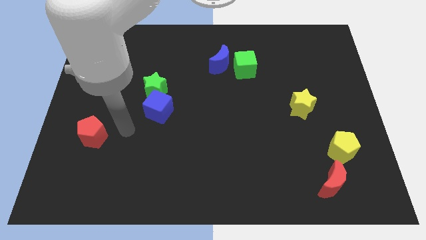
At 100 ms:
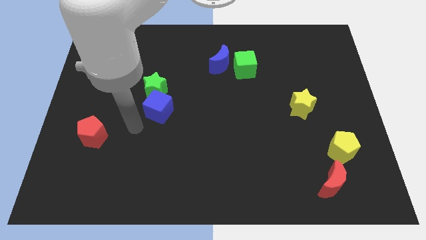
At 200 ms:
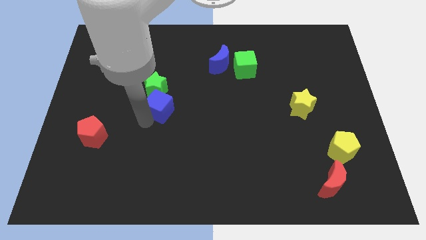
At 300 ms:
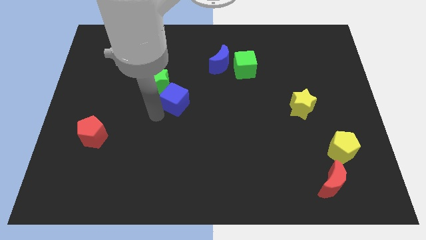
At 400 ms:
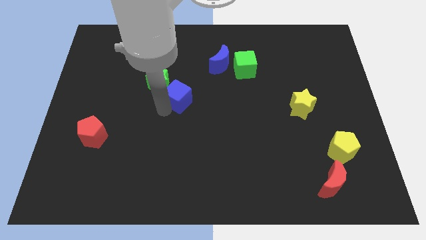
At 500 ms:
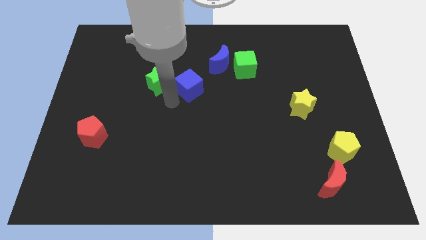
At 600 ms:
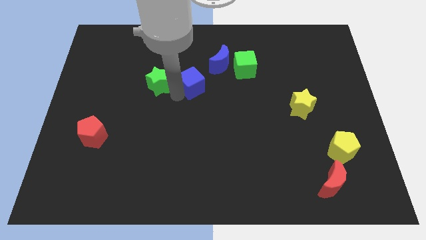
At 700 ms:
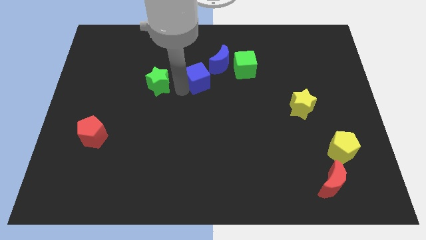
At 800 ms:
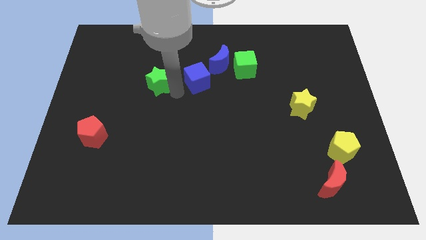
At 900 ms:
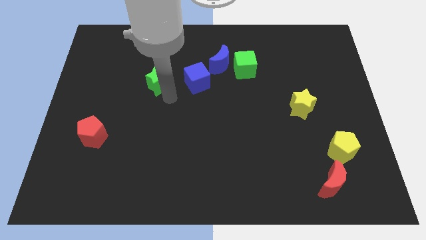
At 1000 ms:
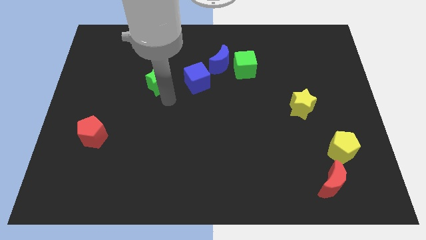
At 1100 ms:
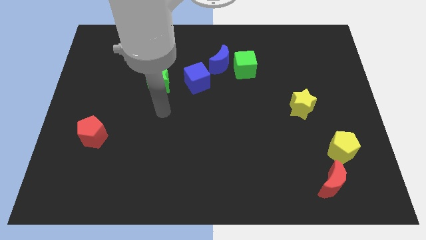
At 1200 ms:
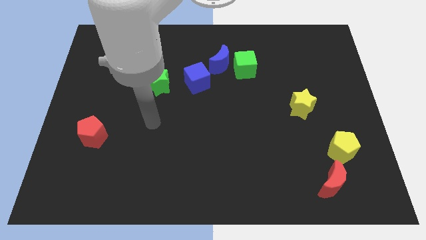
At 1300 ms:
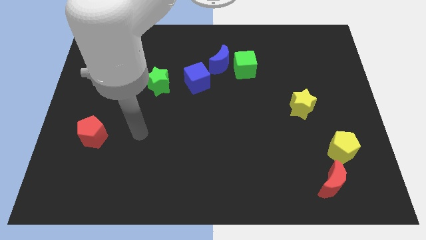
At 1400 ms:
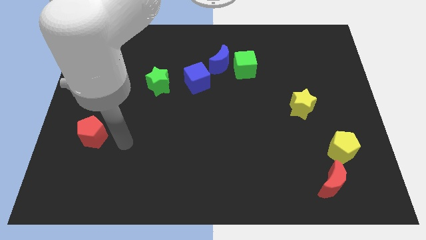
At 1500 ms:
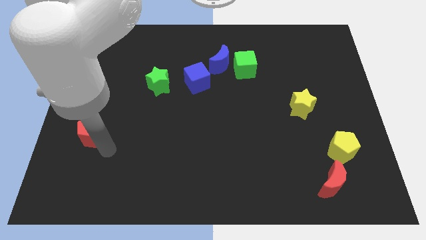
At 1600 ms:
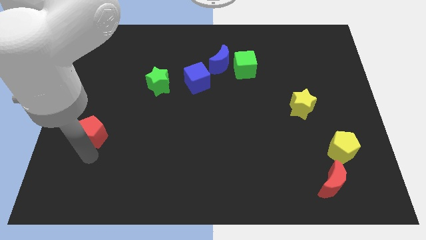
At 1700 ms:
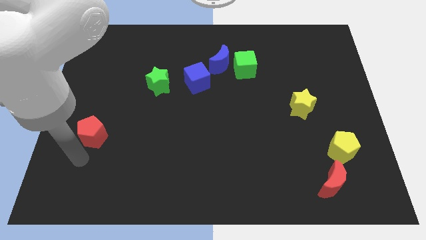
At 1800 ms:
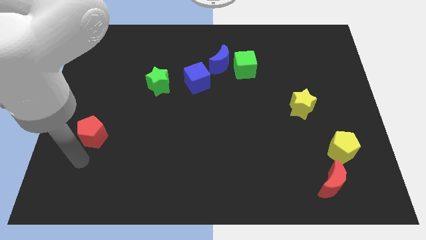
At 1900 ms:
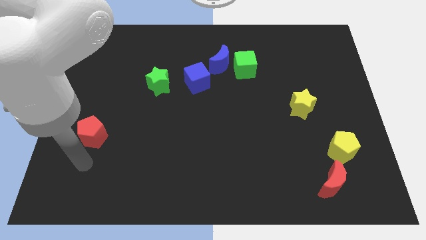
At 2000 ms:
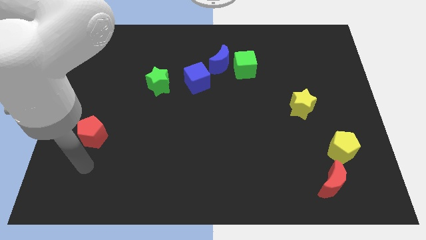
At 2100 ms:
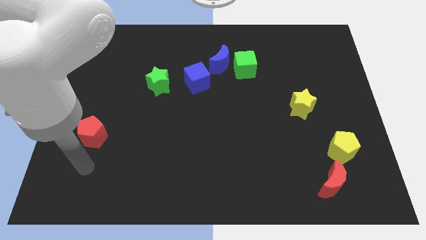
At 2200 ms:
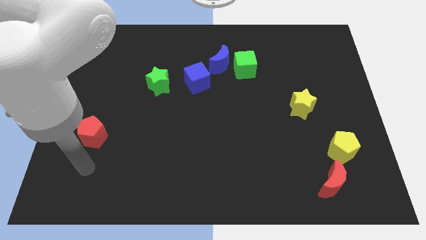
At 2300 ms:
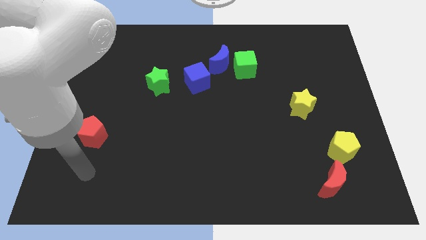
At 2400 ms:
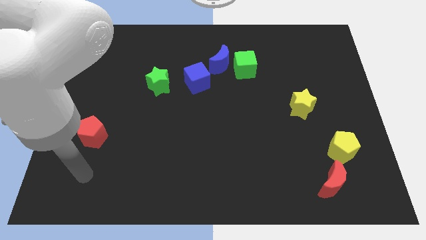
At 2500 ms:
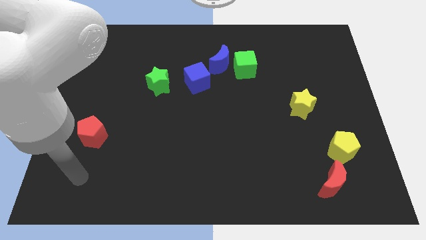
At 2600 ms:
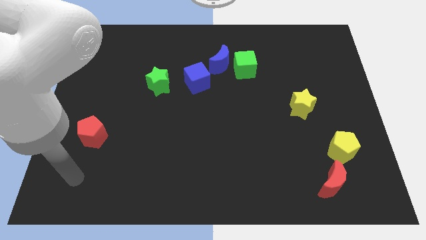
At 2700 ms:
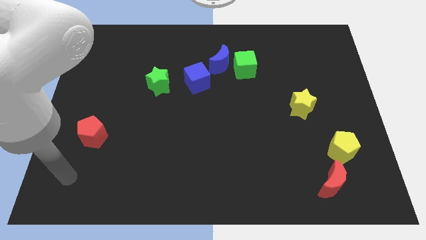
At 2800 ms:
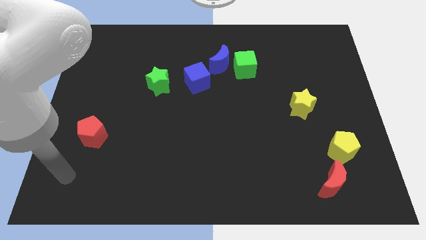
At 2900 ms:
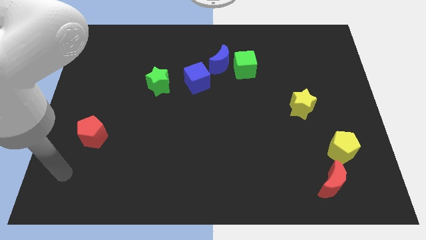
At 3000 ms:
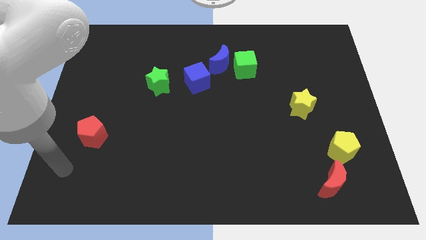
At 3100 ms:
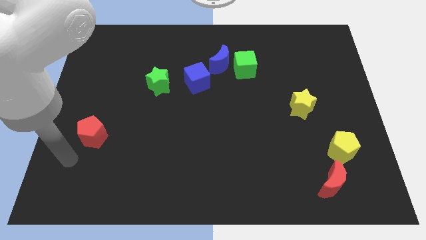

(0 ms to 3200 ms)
move the blue cube to the left of the blue crescent

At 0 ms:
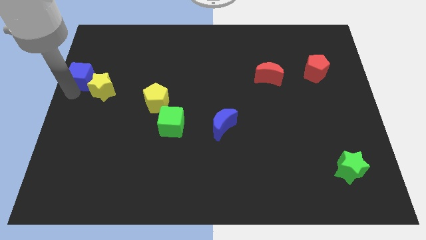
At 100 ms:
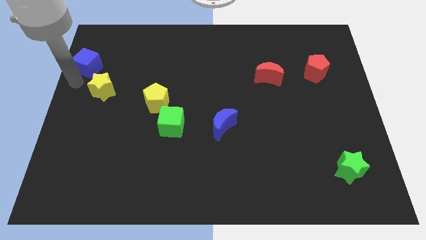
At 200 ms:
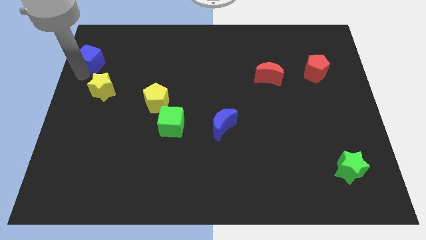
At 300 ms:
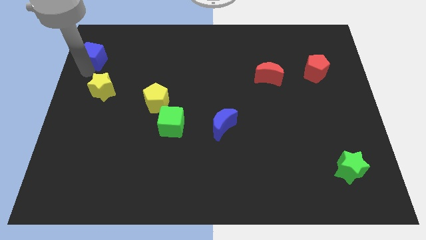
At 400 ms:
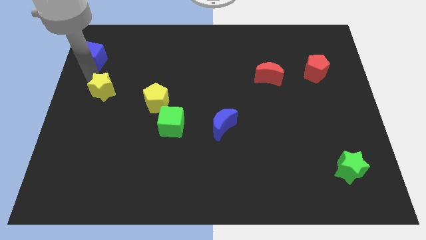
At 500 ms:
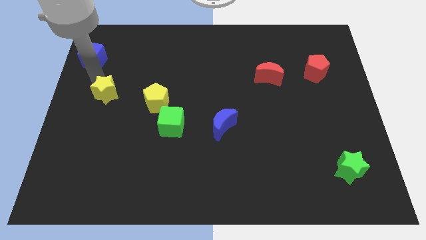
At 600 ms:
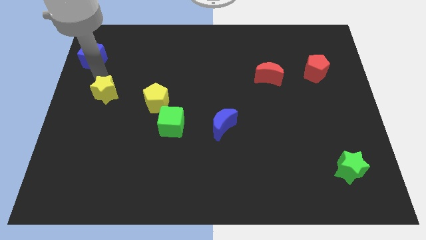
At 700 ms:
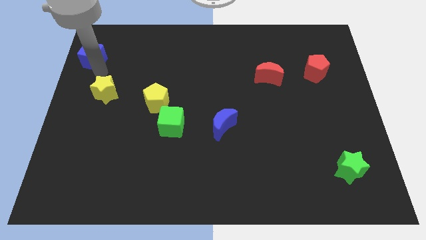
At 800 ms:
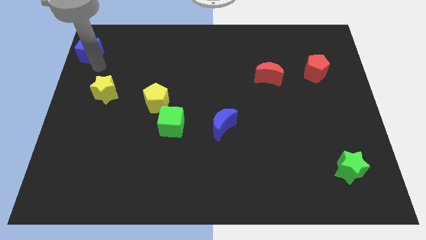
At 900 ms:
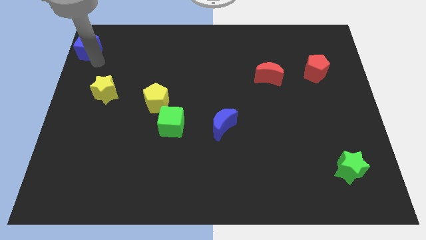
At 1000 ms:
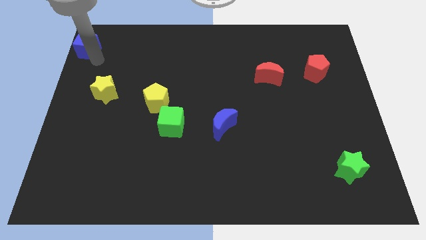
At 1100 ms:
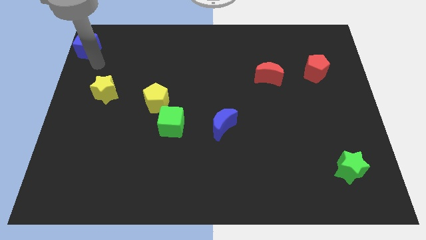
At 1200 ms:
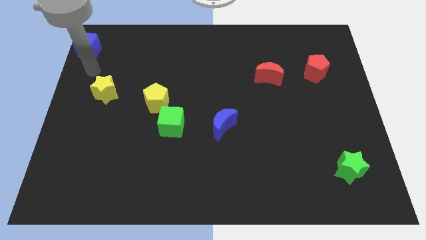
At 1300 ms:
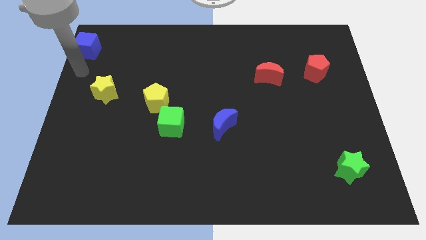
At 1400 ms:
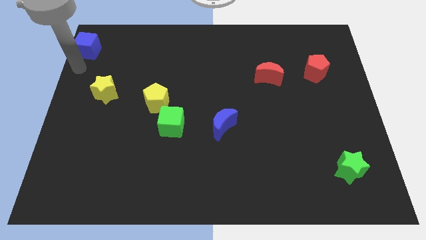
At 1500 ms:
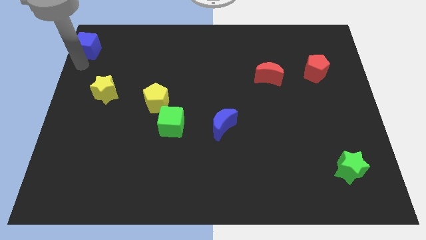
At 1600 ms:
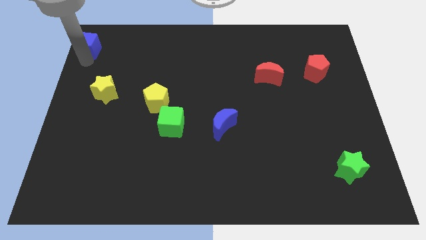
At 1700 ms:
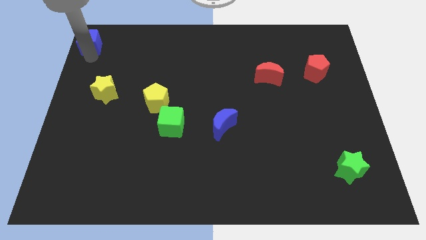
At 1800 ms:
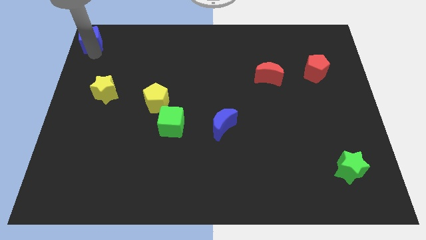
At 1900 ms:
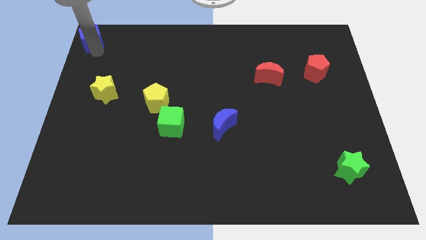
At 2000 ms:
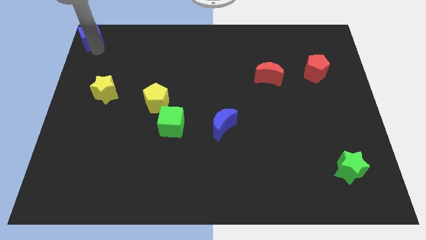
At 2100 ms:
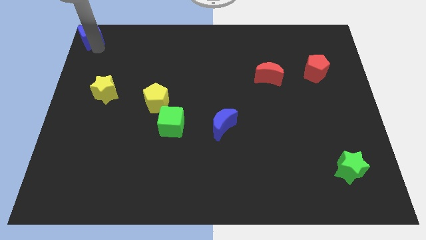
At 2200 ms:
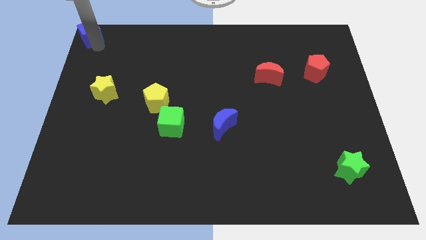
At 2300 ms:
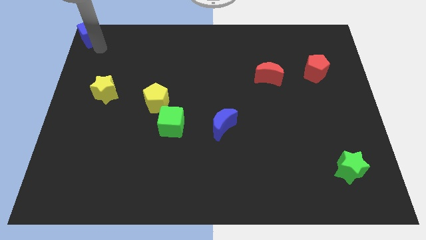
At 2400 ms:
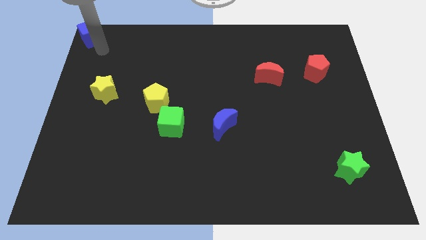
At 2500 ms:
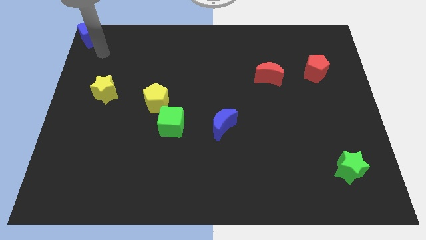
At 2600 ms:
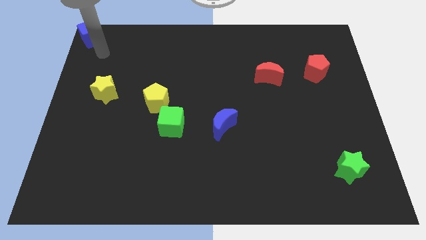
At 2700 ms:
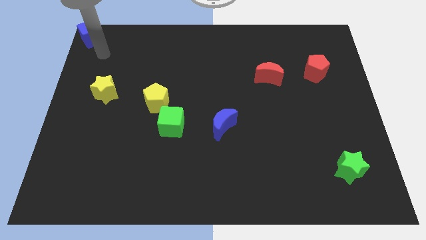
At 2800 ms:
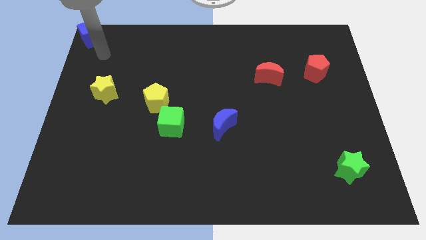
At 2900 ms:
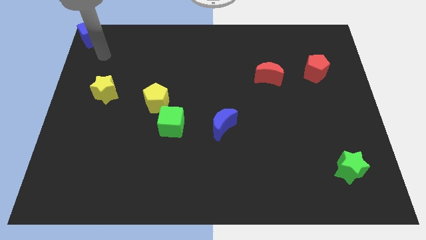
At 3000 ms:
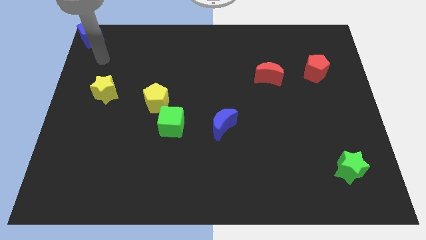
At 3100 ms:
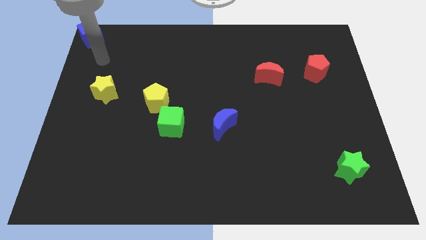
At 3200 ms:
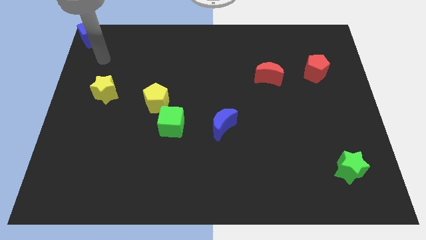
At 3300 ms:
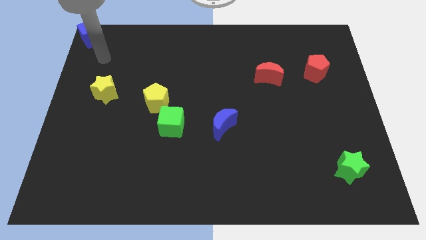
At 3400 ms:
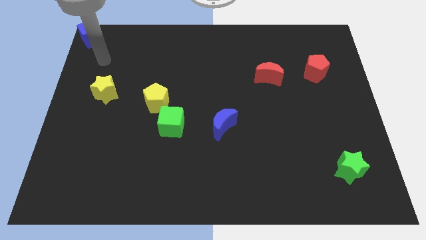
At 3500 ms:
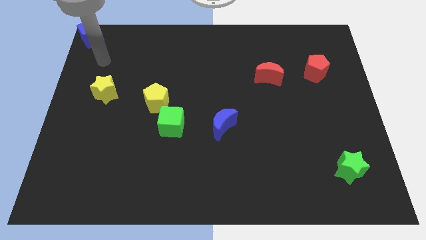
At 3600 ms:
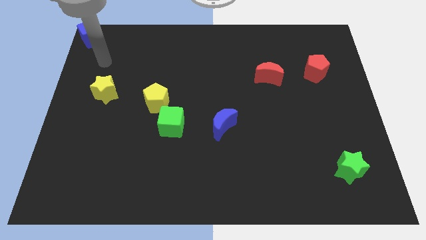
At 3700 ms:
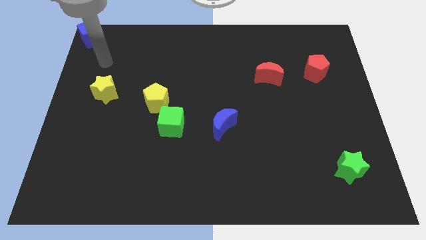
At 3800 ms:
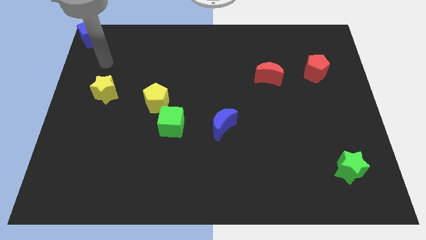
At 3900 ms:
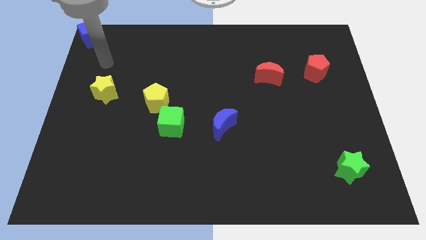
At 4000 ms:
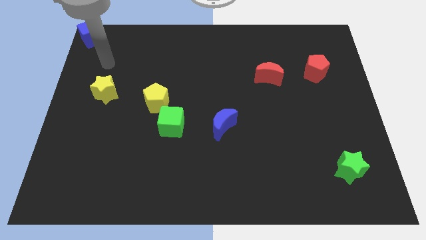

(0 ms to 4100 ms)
move the blue cube to the top left corner of the board

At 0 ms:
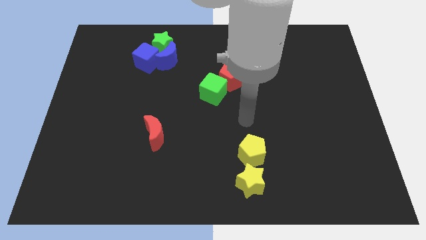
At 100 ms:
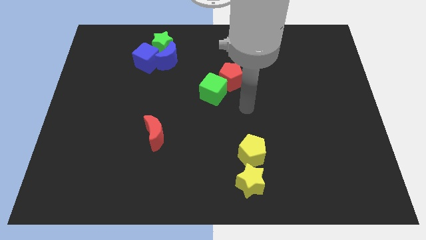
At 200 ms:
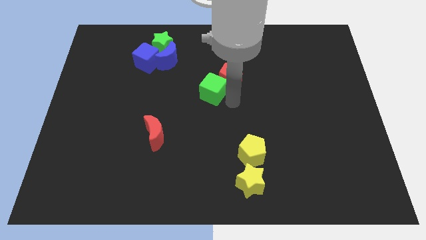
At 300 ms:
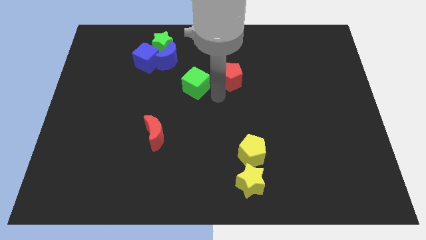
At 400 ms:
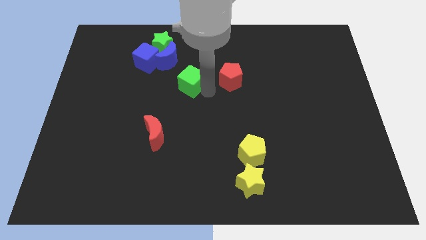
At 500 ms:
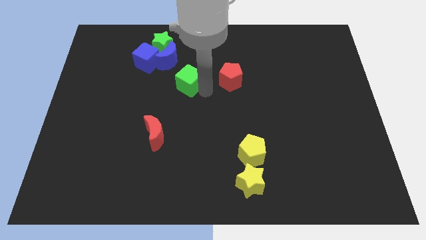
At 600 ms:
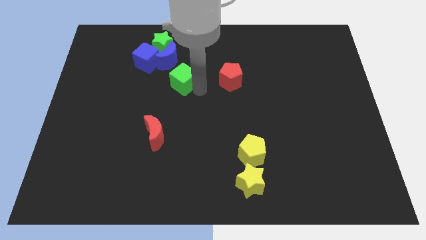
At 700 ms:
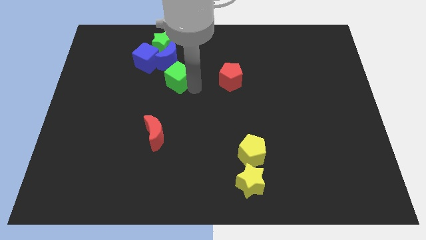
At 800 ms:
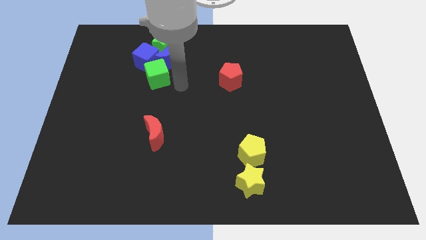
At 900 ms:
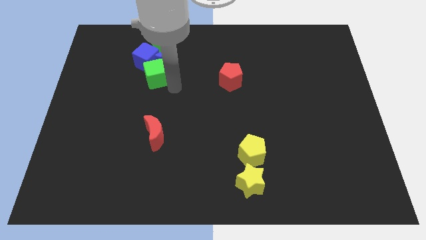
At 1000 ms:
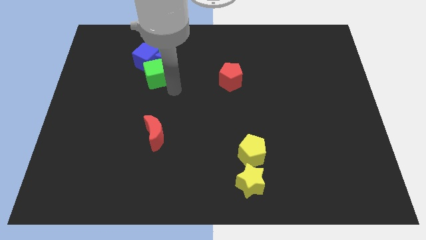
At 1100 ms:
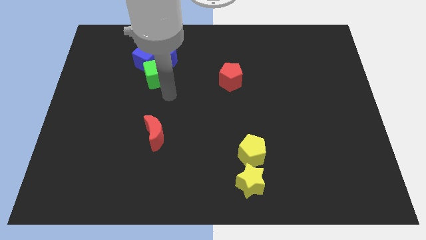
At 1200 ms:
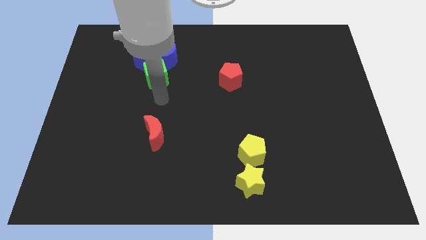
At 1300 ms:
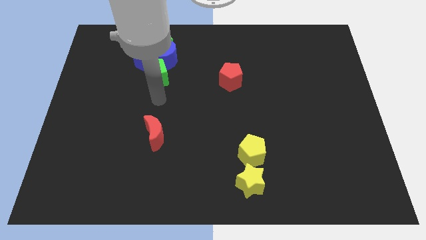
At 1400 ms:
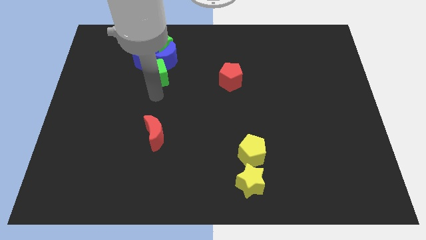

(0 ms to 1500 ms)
put the green cube below the blue blocks

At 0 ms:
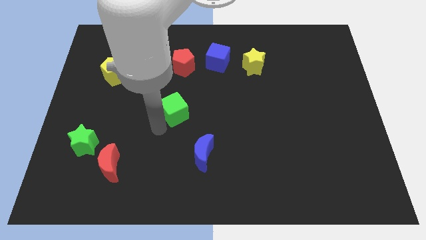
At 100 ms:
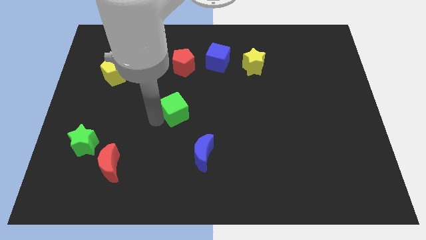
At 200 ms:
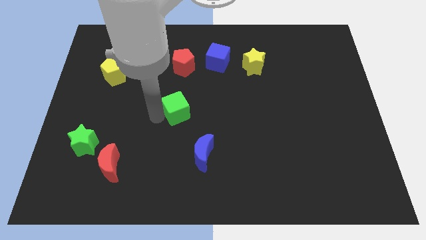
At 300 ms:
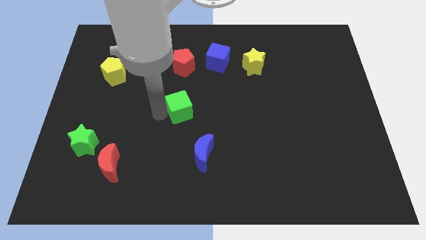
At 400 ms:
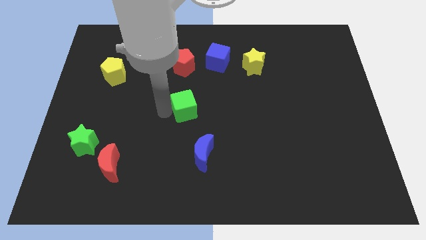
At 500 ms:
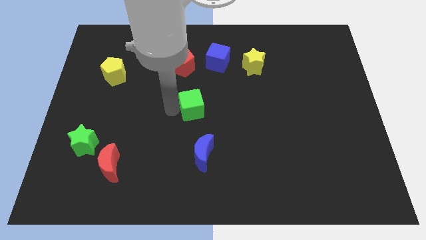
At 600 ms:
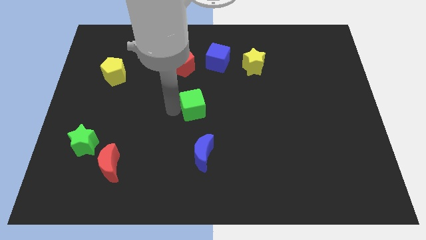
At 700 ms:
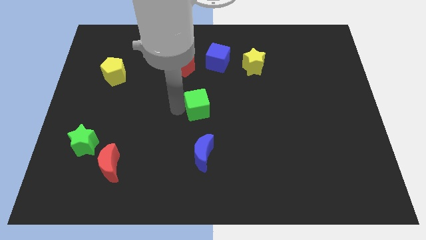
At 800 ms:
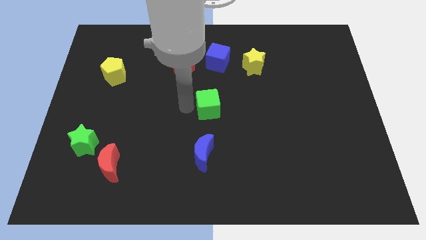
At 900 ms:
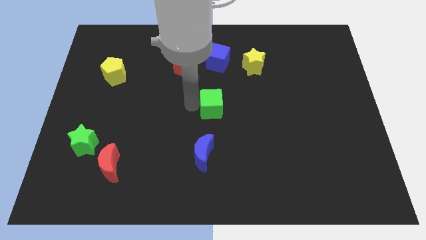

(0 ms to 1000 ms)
push green cube in between blue blocks
